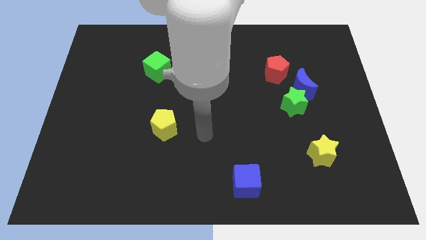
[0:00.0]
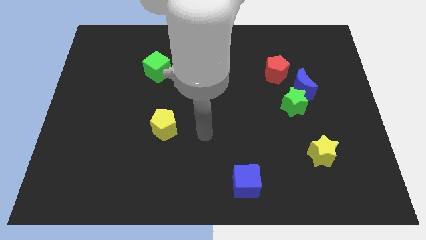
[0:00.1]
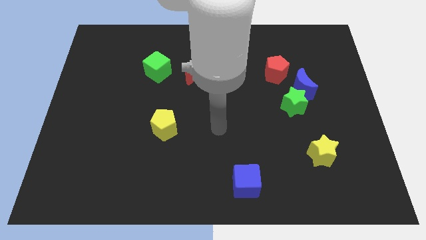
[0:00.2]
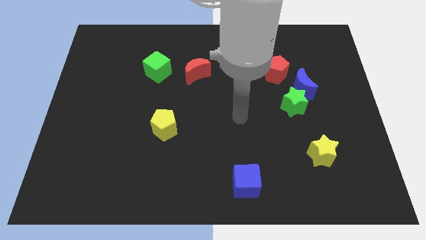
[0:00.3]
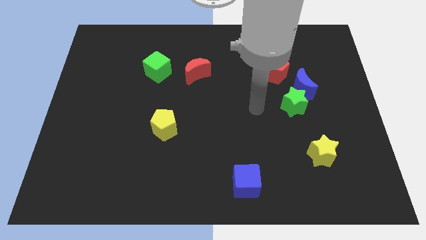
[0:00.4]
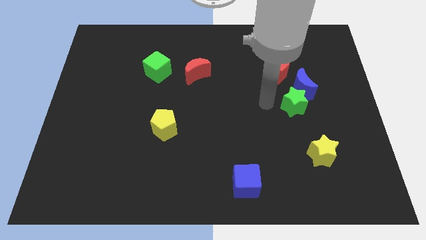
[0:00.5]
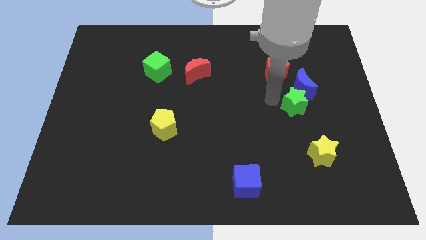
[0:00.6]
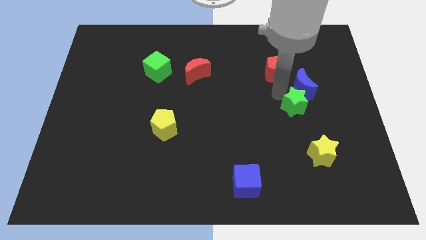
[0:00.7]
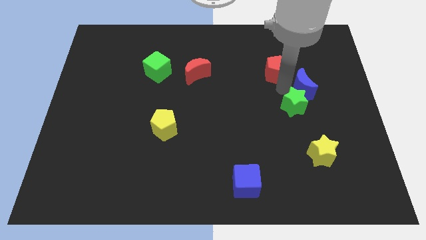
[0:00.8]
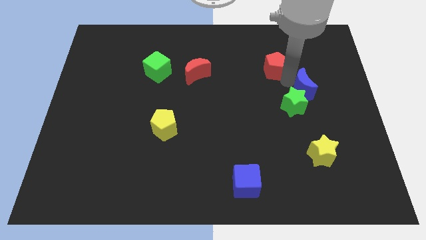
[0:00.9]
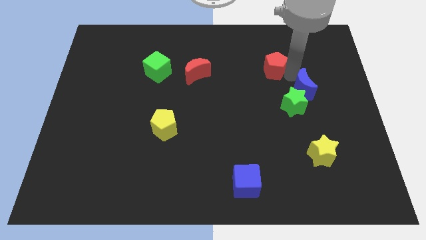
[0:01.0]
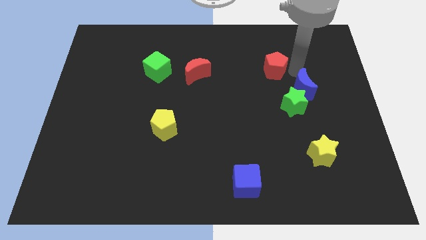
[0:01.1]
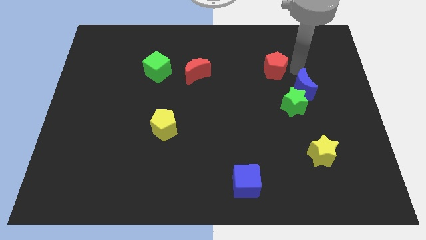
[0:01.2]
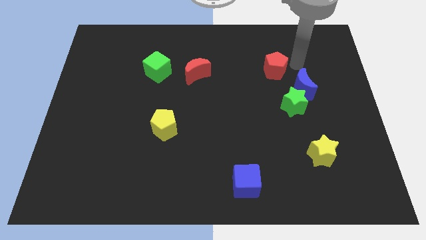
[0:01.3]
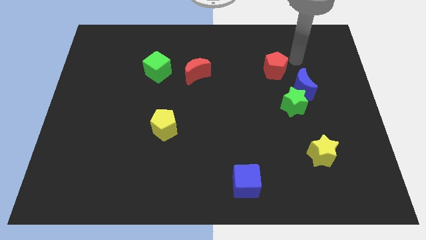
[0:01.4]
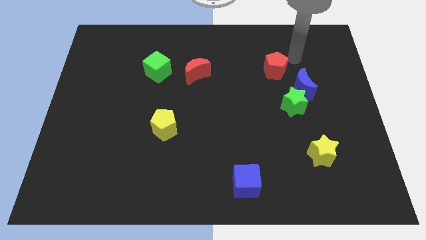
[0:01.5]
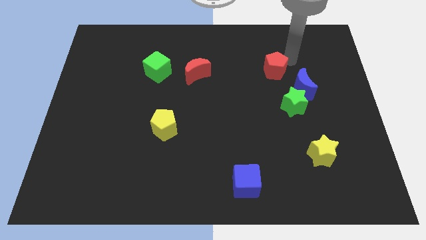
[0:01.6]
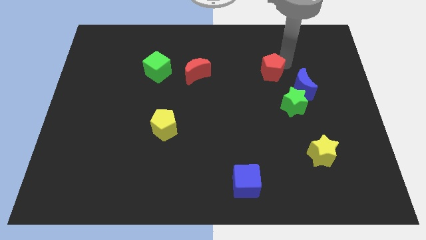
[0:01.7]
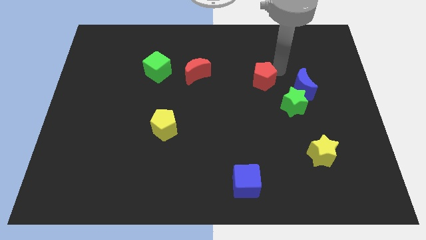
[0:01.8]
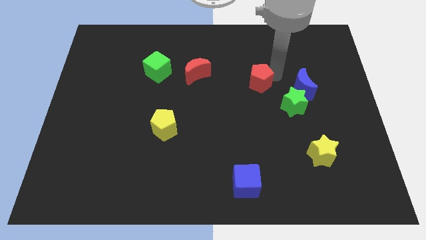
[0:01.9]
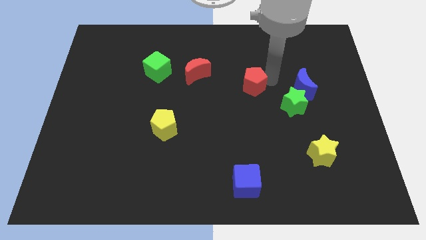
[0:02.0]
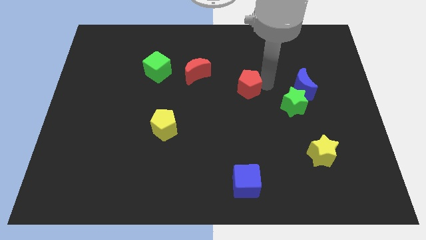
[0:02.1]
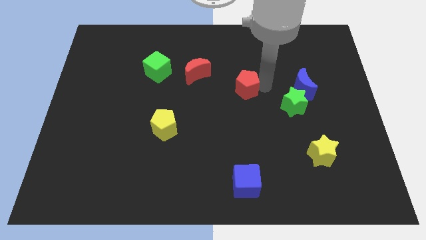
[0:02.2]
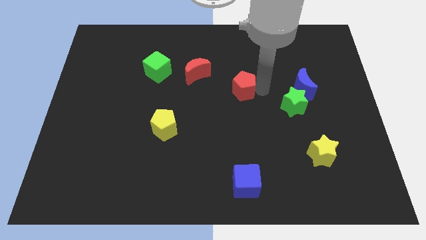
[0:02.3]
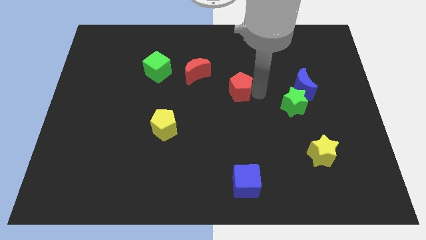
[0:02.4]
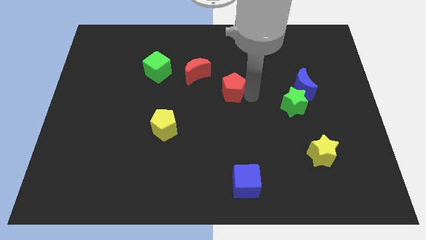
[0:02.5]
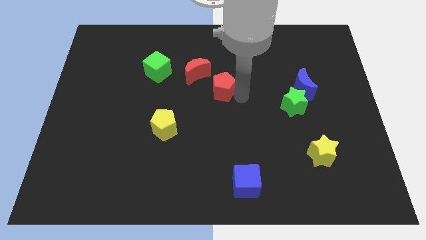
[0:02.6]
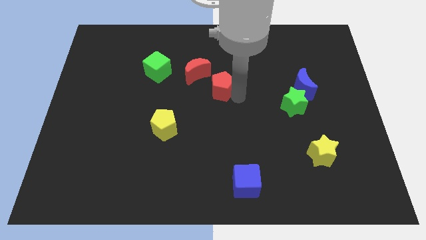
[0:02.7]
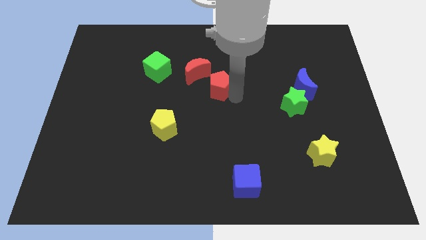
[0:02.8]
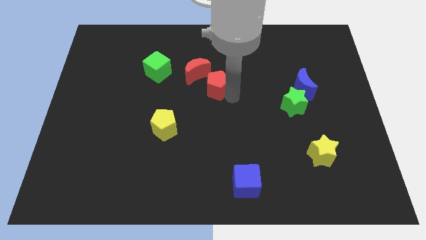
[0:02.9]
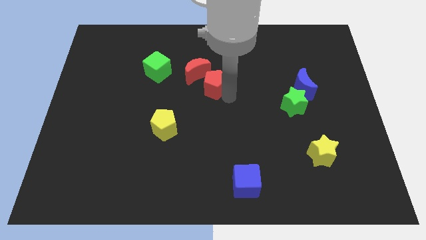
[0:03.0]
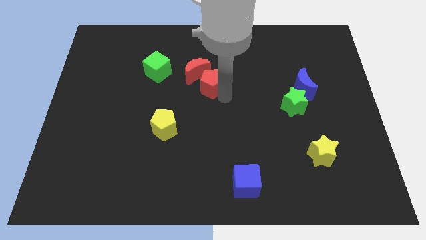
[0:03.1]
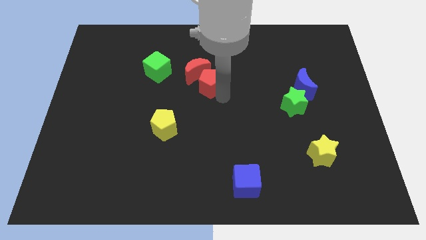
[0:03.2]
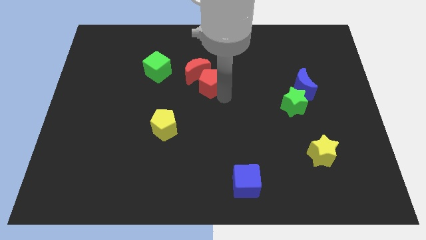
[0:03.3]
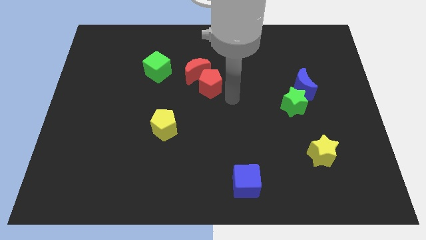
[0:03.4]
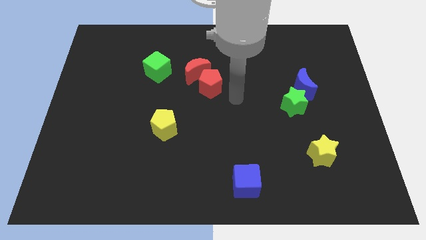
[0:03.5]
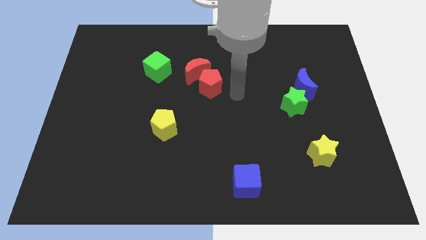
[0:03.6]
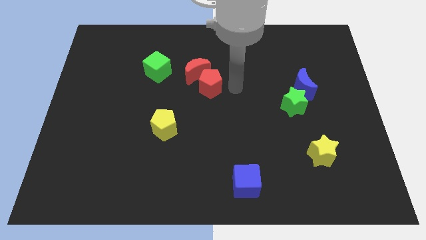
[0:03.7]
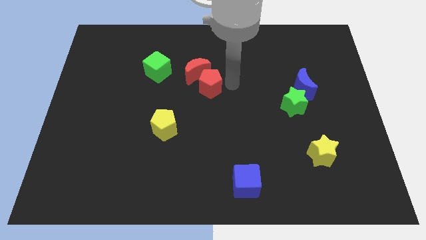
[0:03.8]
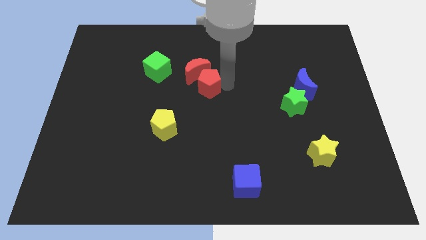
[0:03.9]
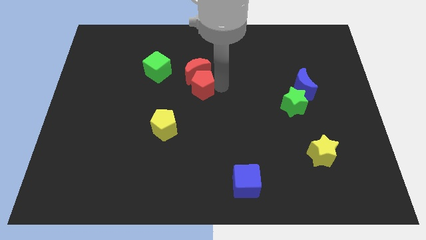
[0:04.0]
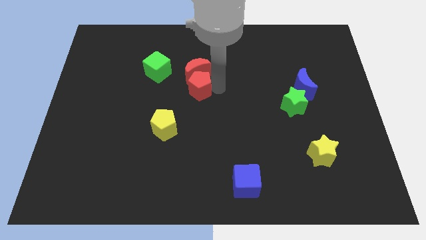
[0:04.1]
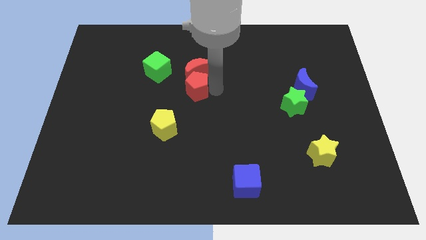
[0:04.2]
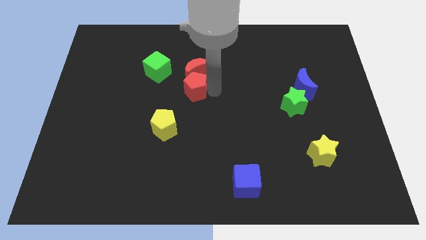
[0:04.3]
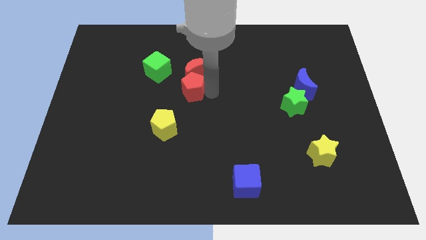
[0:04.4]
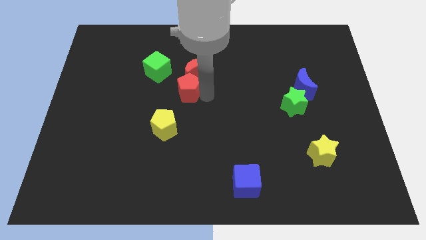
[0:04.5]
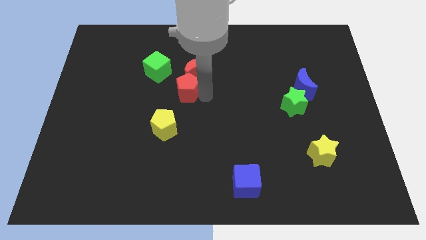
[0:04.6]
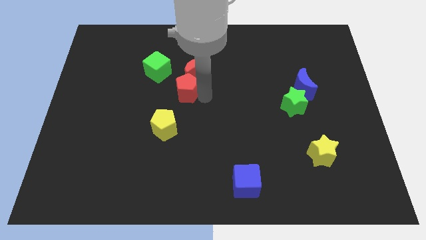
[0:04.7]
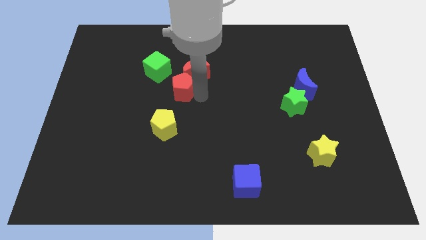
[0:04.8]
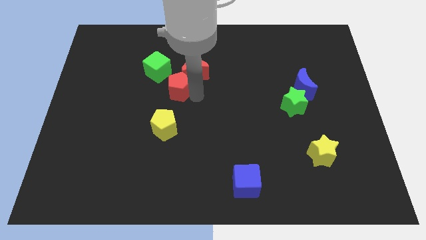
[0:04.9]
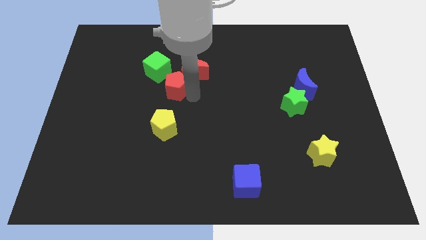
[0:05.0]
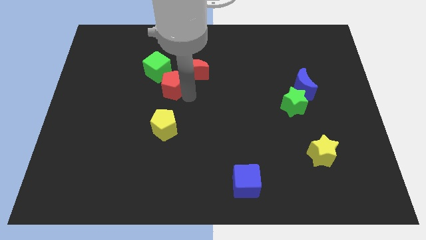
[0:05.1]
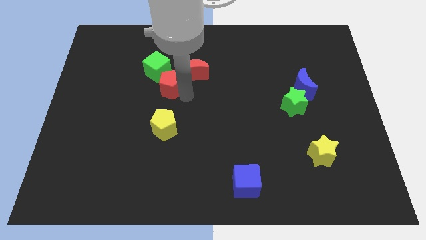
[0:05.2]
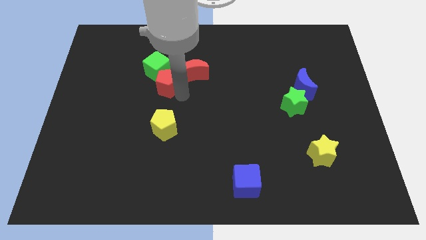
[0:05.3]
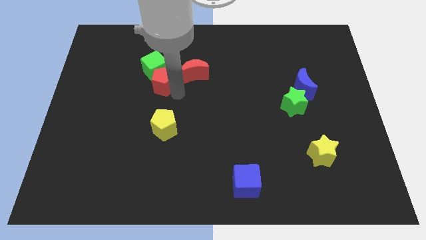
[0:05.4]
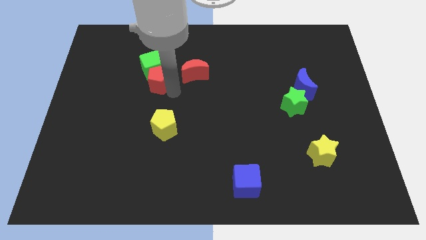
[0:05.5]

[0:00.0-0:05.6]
slide the red pentagon next to the green cube

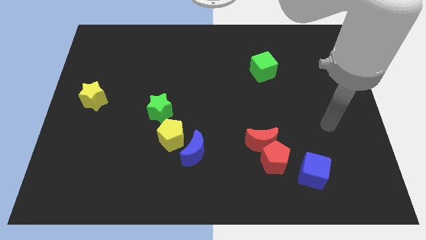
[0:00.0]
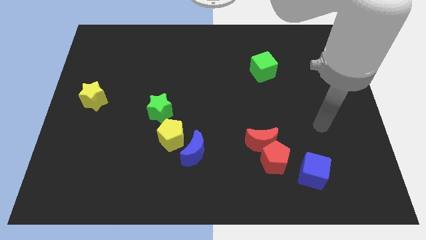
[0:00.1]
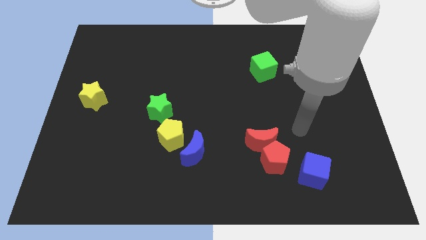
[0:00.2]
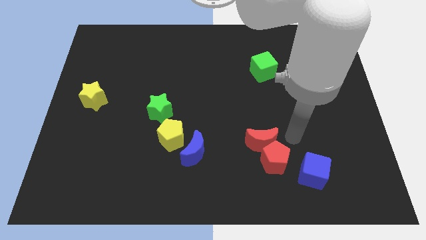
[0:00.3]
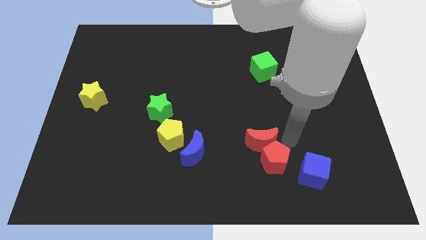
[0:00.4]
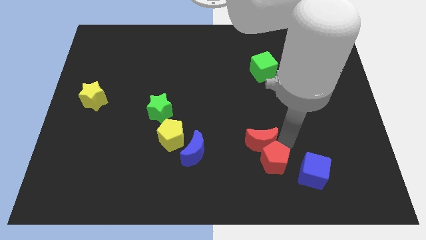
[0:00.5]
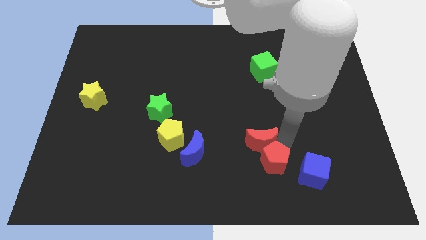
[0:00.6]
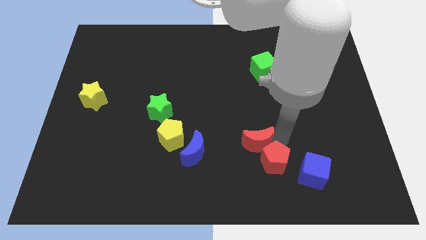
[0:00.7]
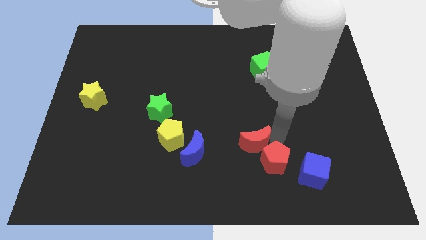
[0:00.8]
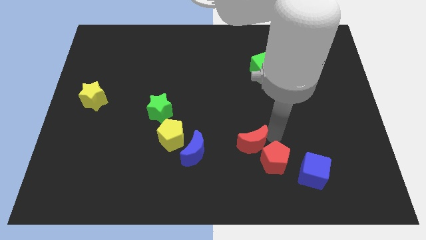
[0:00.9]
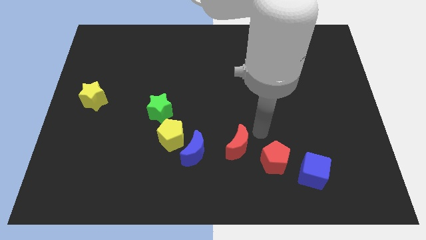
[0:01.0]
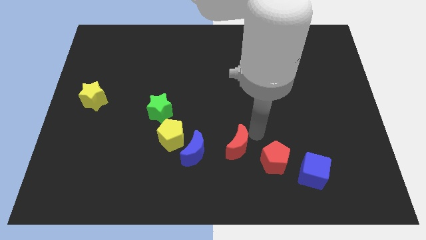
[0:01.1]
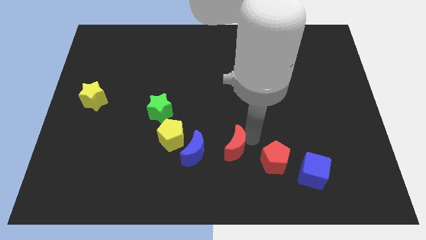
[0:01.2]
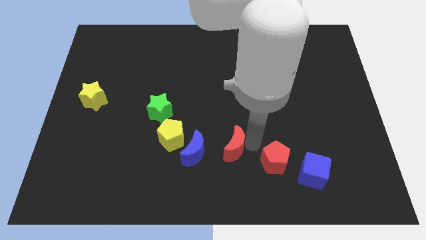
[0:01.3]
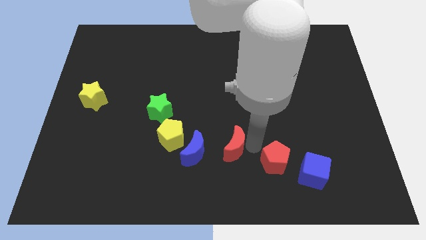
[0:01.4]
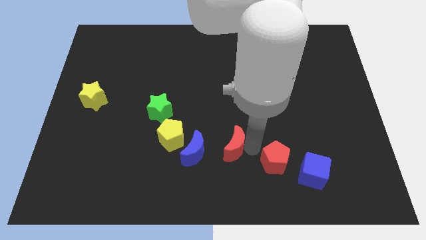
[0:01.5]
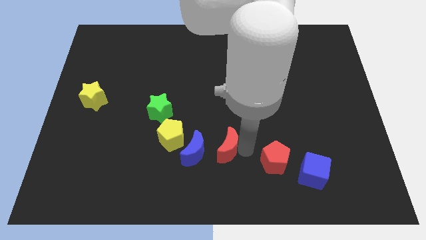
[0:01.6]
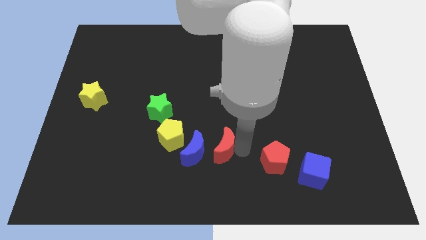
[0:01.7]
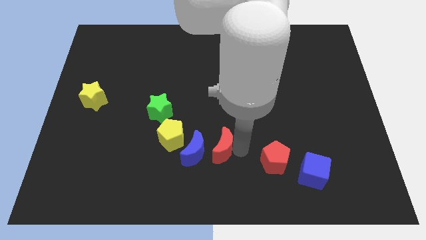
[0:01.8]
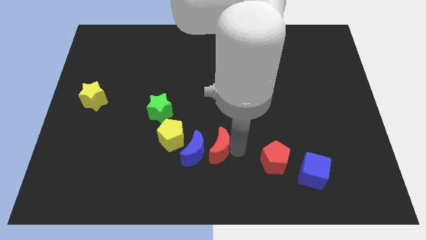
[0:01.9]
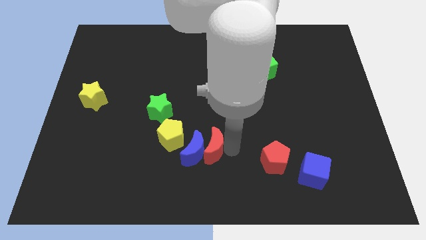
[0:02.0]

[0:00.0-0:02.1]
slide the red moon close to the blue moon

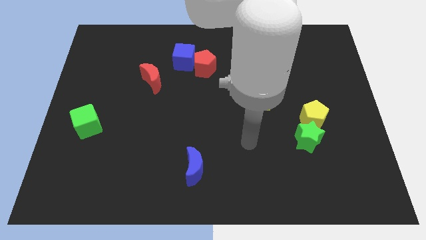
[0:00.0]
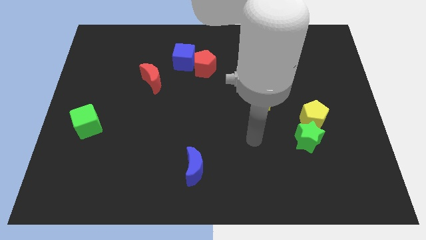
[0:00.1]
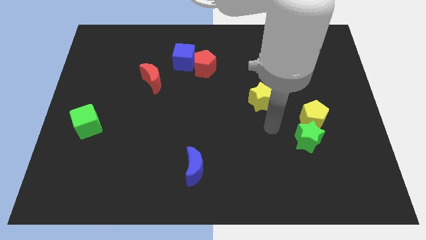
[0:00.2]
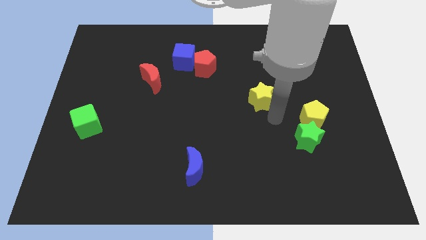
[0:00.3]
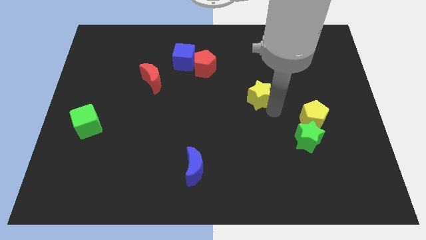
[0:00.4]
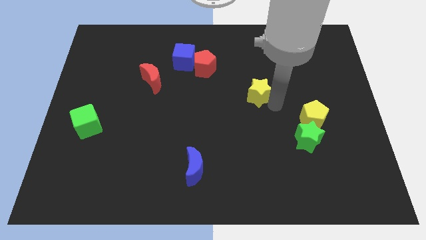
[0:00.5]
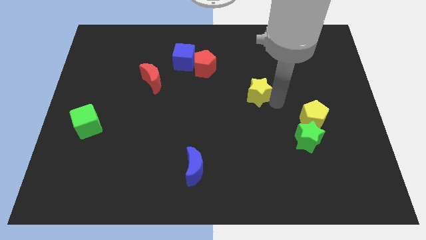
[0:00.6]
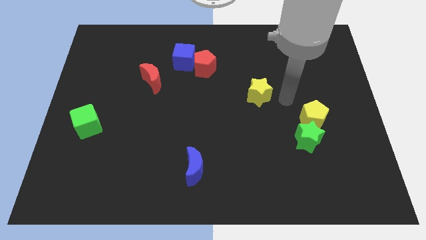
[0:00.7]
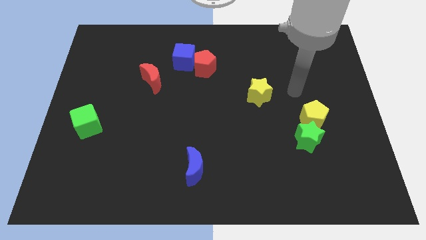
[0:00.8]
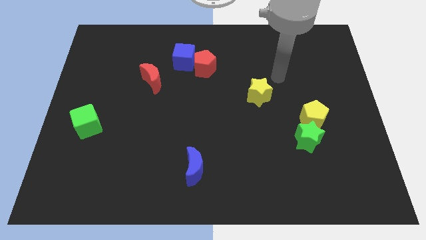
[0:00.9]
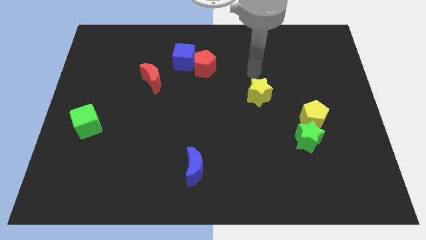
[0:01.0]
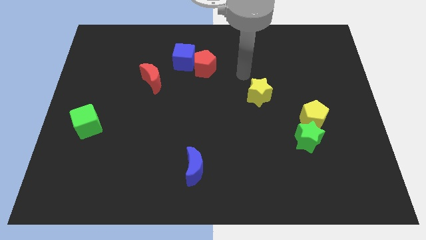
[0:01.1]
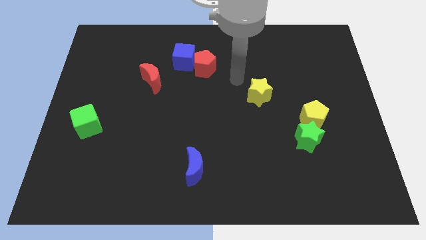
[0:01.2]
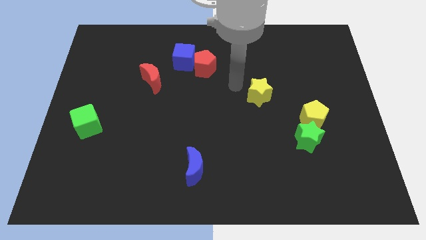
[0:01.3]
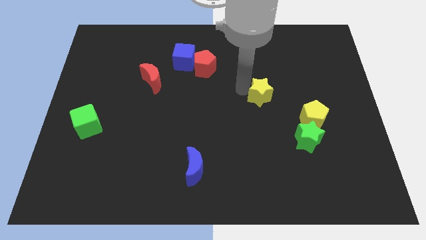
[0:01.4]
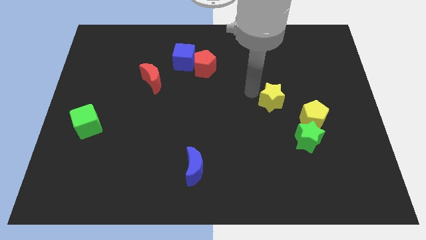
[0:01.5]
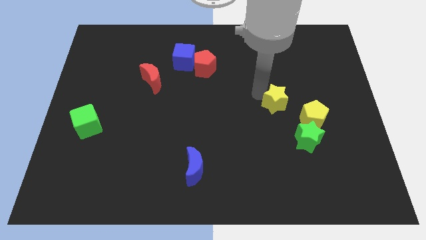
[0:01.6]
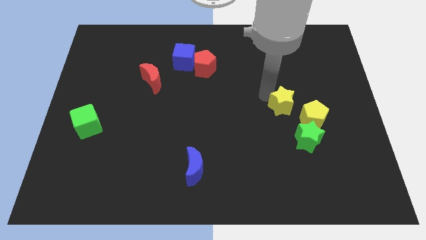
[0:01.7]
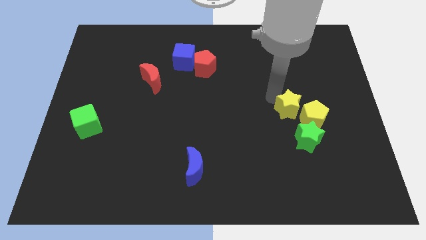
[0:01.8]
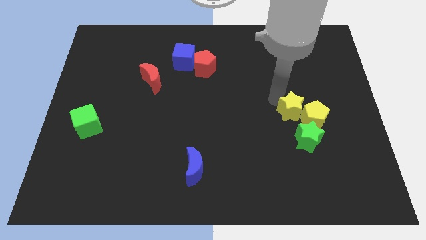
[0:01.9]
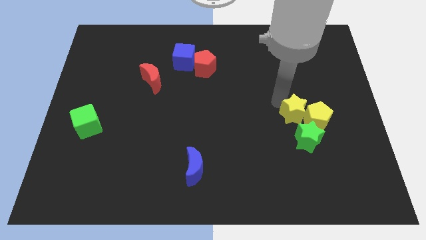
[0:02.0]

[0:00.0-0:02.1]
push the yellow star next to the yellow pentagon
